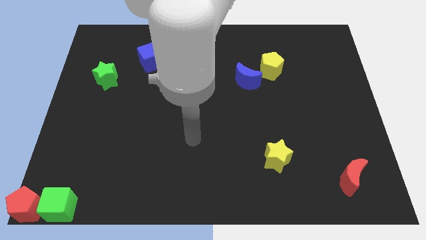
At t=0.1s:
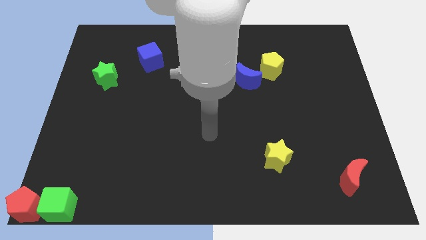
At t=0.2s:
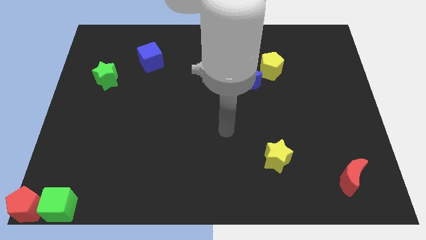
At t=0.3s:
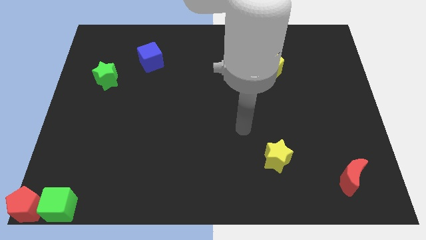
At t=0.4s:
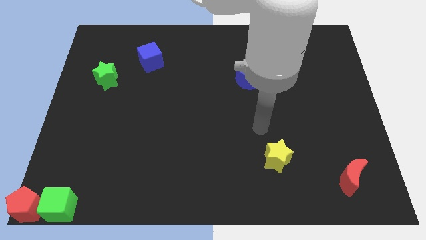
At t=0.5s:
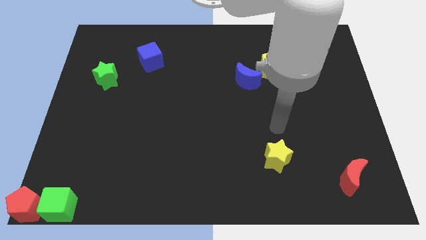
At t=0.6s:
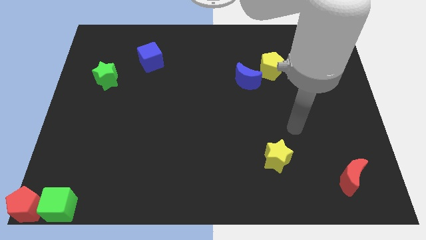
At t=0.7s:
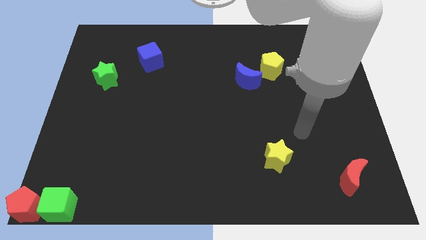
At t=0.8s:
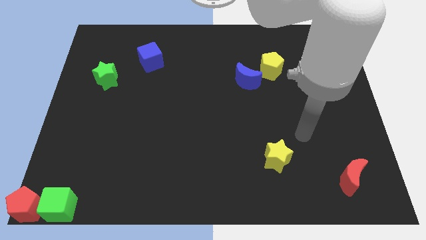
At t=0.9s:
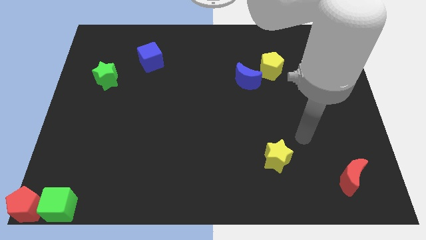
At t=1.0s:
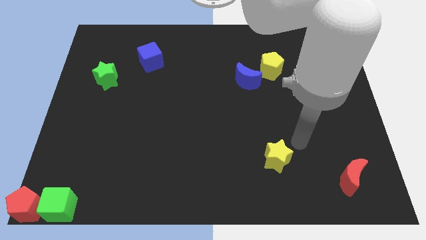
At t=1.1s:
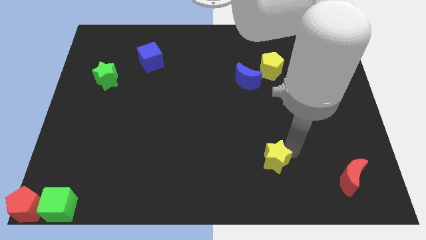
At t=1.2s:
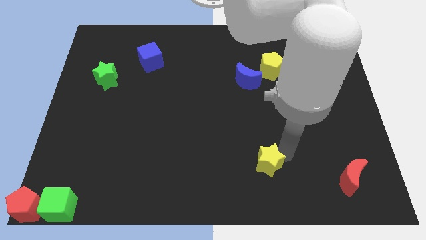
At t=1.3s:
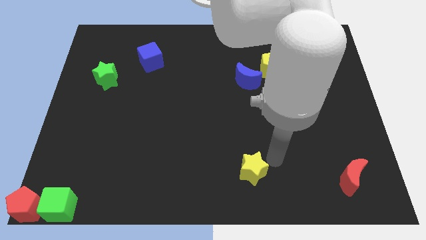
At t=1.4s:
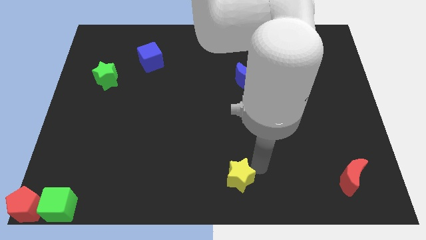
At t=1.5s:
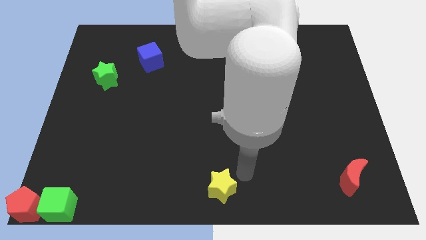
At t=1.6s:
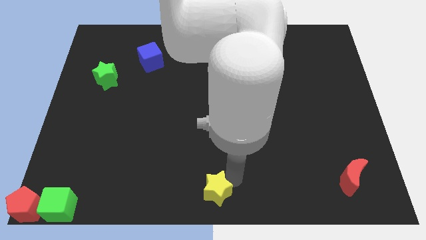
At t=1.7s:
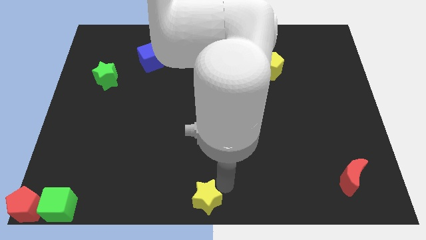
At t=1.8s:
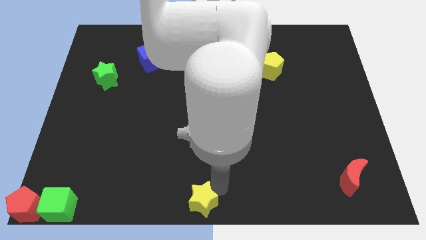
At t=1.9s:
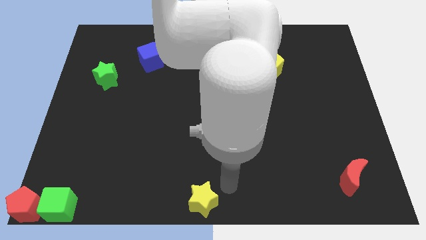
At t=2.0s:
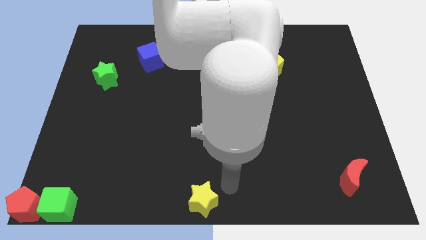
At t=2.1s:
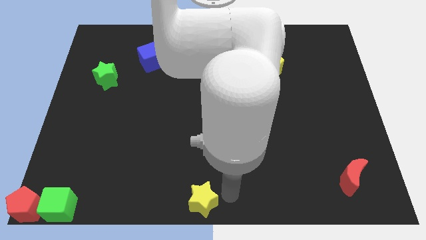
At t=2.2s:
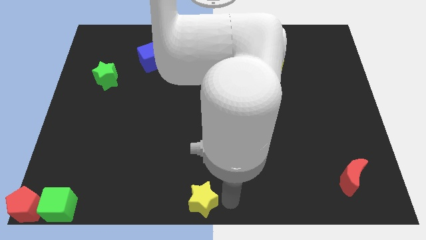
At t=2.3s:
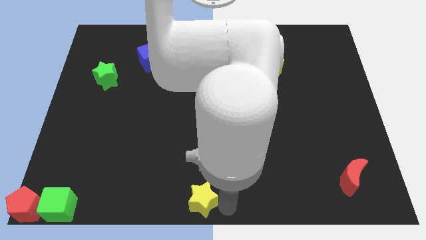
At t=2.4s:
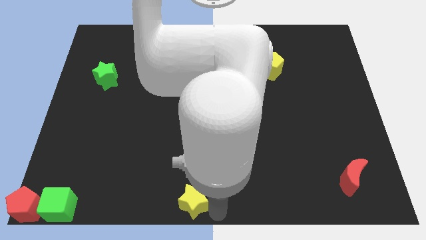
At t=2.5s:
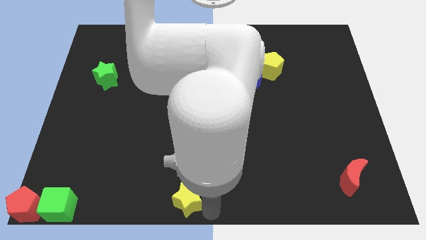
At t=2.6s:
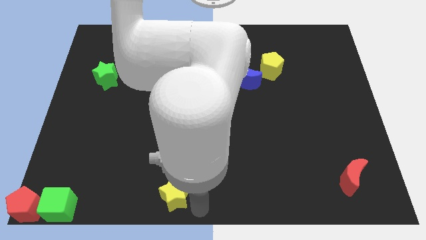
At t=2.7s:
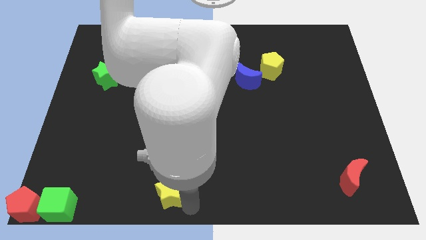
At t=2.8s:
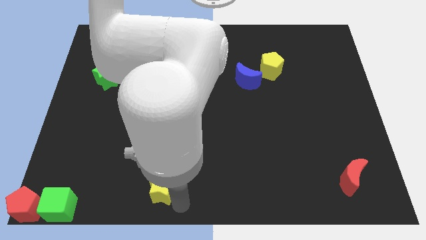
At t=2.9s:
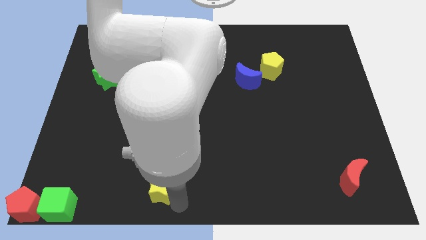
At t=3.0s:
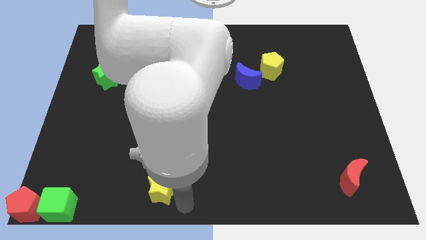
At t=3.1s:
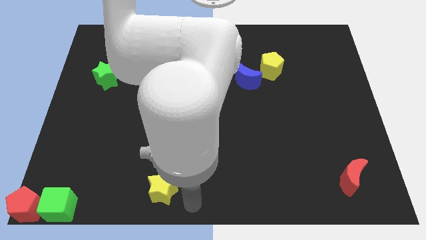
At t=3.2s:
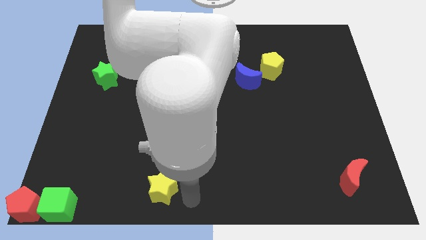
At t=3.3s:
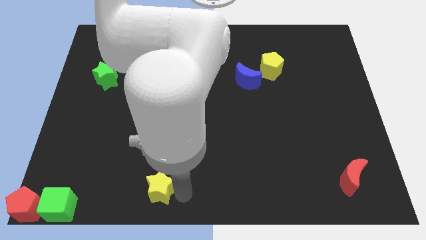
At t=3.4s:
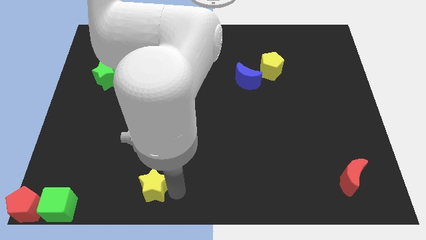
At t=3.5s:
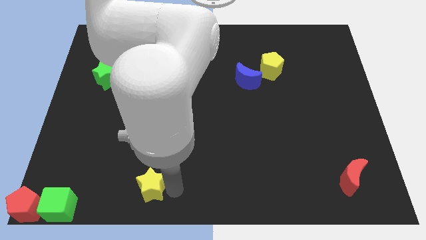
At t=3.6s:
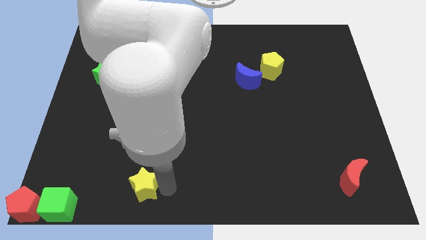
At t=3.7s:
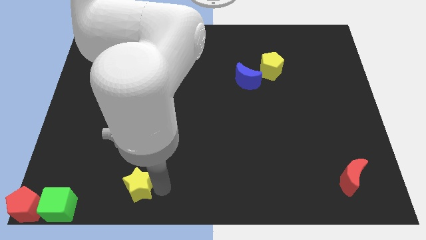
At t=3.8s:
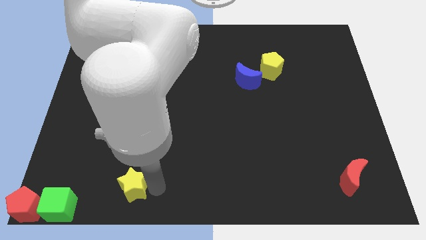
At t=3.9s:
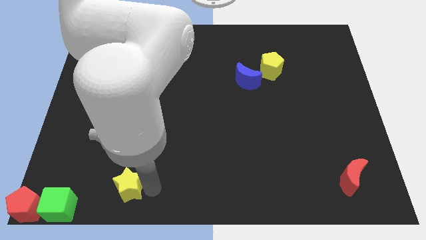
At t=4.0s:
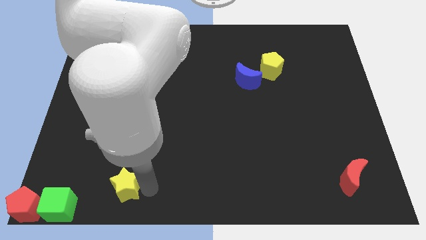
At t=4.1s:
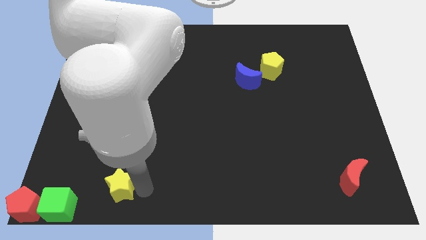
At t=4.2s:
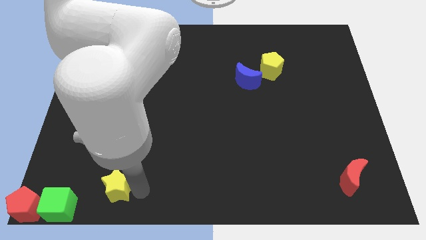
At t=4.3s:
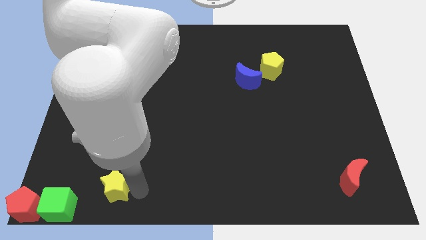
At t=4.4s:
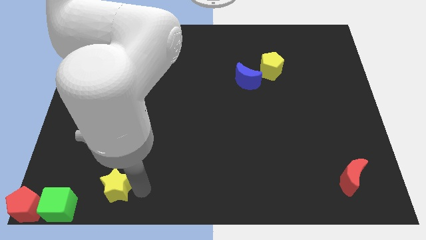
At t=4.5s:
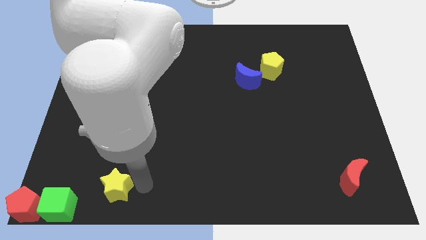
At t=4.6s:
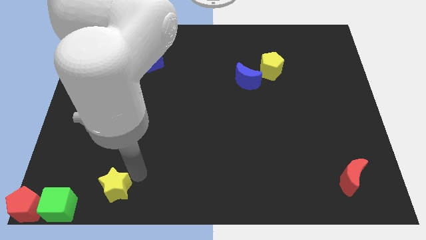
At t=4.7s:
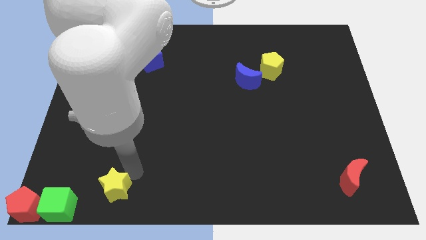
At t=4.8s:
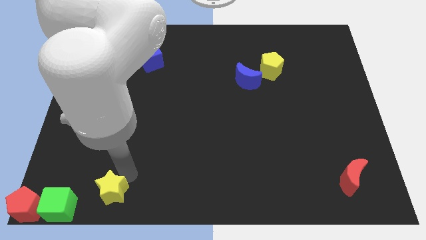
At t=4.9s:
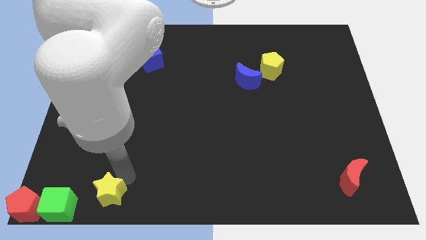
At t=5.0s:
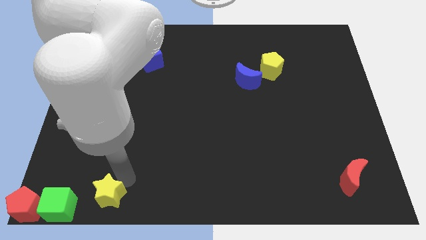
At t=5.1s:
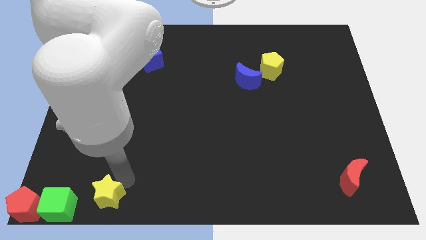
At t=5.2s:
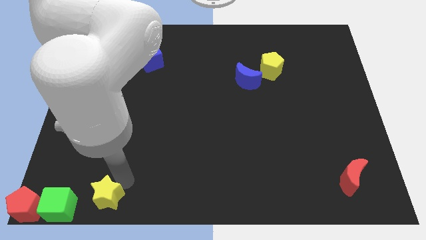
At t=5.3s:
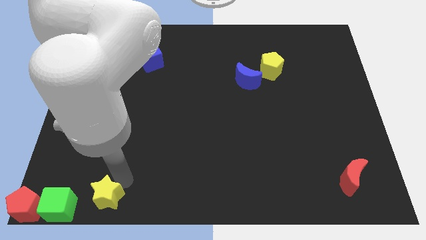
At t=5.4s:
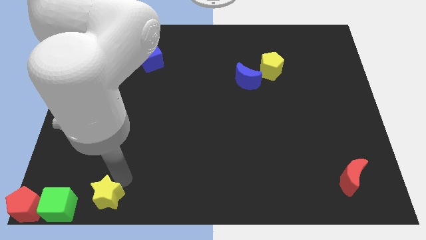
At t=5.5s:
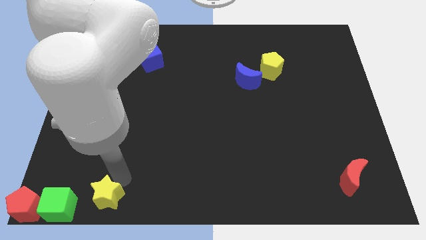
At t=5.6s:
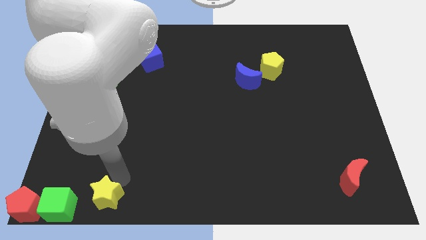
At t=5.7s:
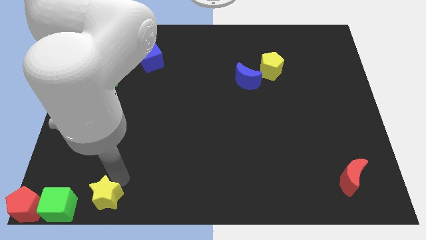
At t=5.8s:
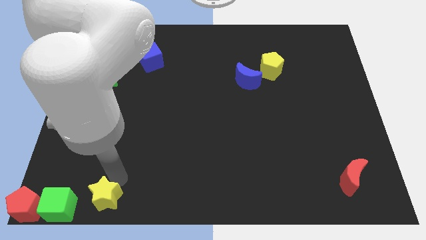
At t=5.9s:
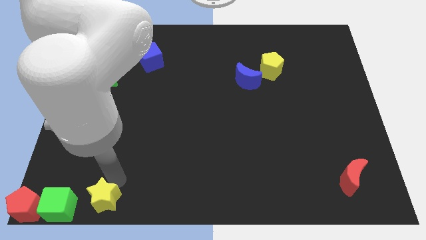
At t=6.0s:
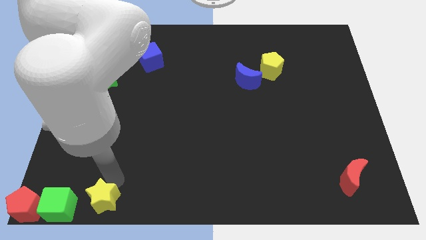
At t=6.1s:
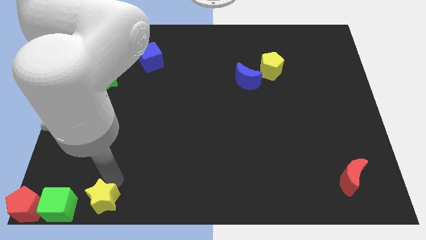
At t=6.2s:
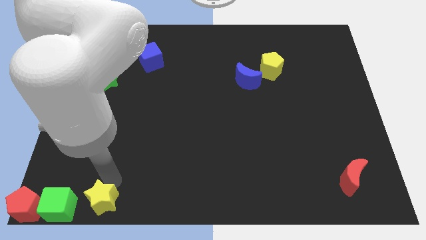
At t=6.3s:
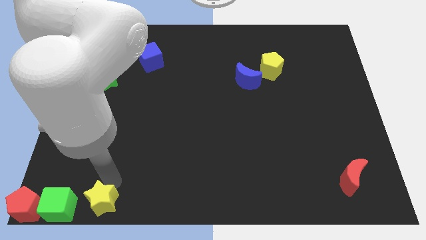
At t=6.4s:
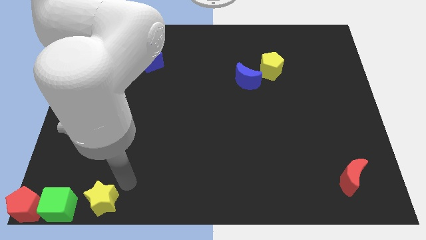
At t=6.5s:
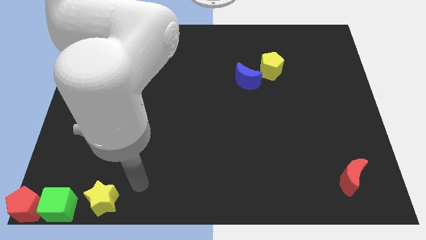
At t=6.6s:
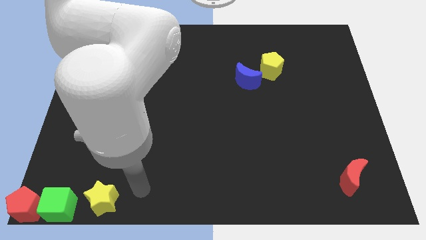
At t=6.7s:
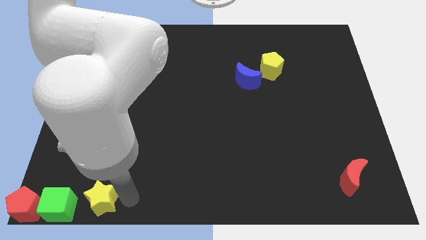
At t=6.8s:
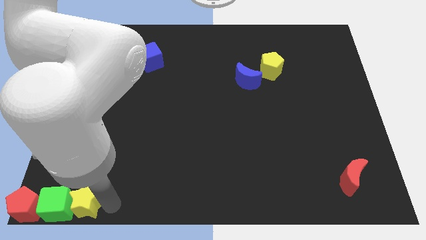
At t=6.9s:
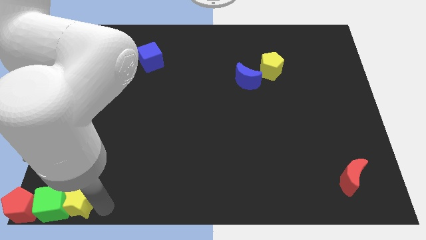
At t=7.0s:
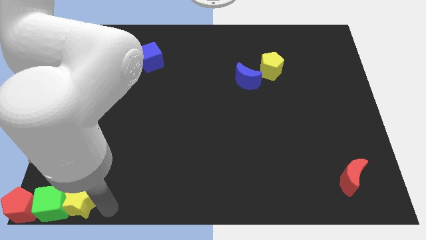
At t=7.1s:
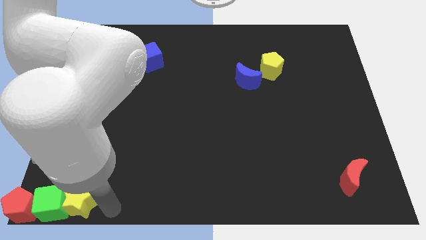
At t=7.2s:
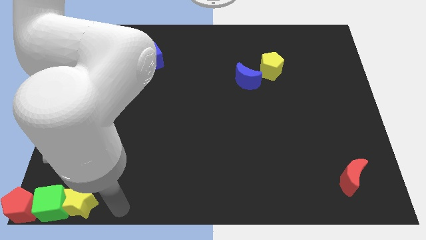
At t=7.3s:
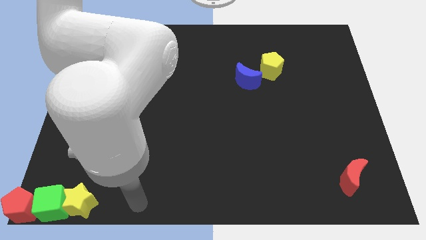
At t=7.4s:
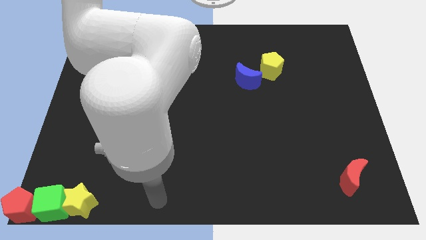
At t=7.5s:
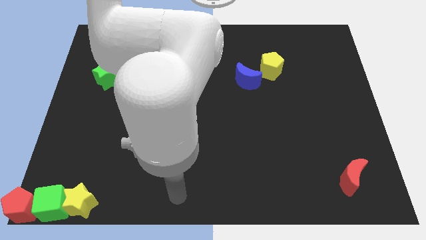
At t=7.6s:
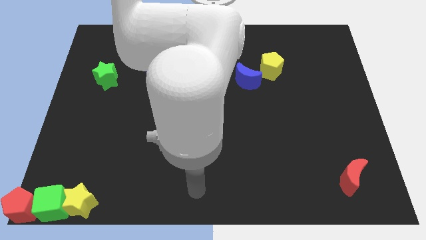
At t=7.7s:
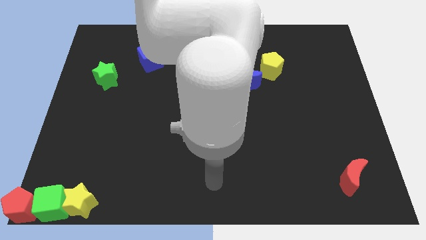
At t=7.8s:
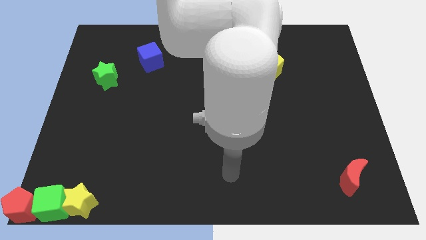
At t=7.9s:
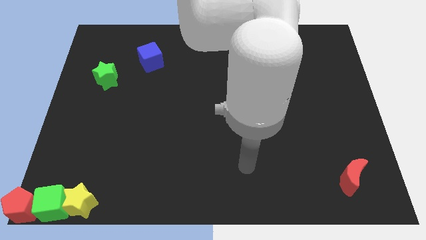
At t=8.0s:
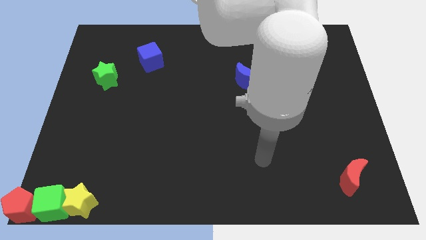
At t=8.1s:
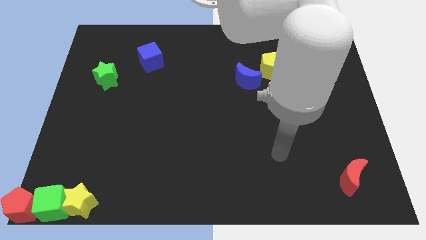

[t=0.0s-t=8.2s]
push the yellow star into the green cube and red pentagon

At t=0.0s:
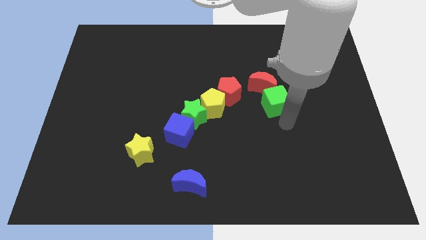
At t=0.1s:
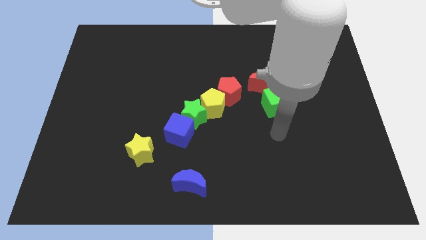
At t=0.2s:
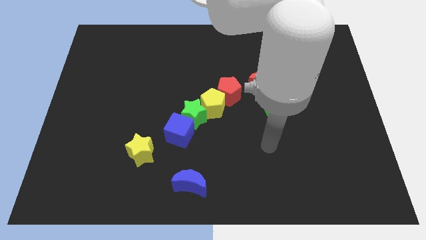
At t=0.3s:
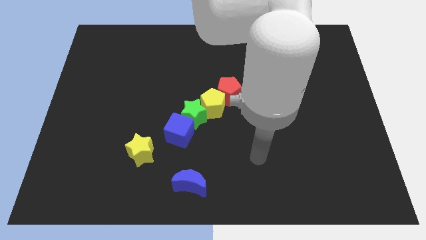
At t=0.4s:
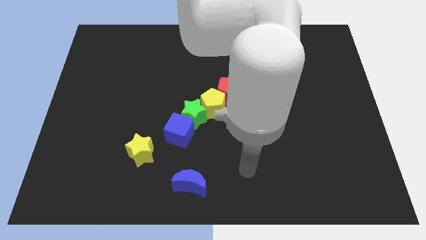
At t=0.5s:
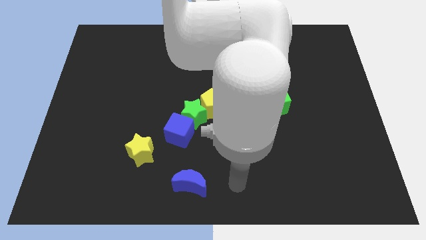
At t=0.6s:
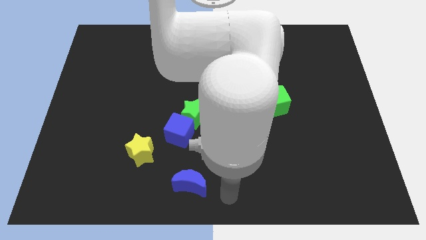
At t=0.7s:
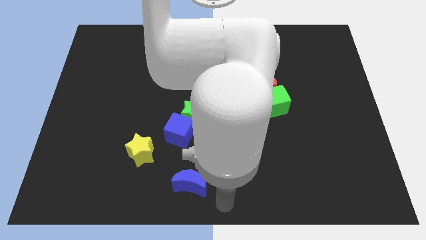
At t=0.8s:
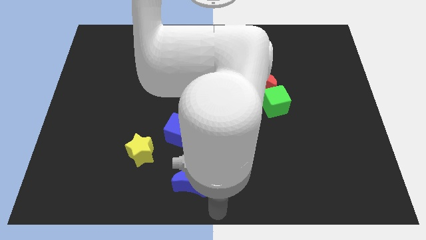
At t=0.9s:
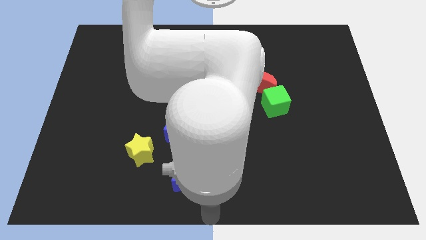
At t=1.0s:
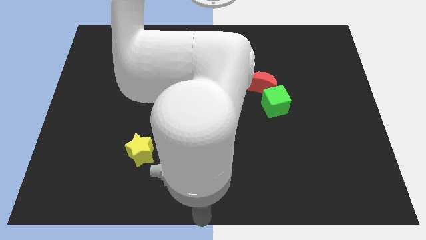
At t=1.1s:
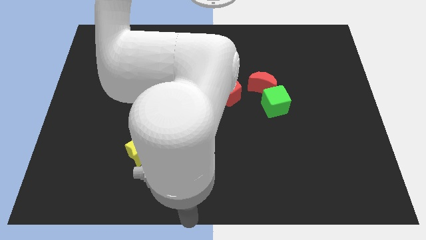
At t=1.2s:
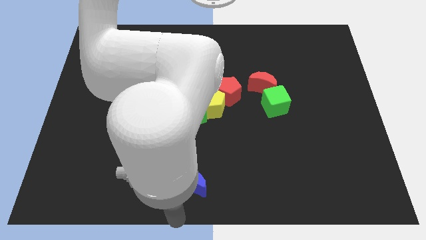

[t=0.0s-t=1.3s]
move the arm towards the bottom centre of the board
